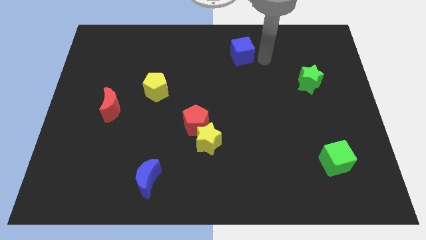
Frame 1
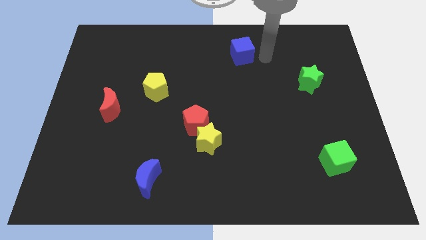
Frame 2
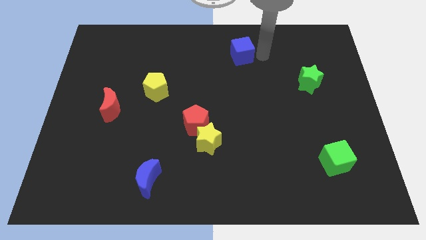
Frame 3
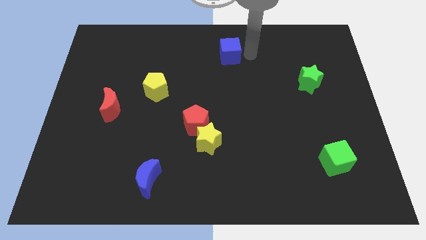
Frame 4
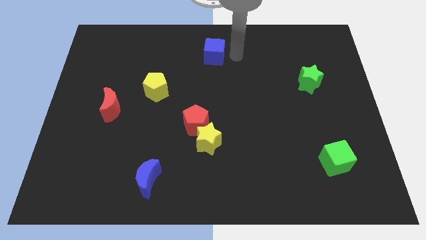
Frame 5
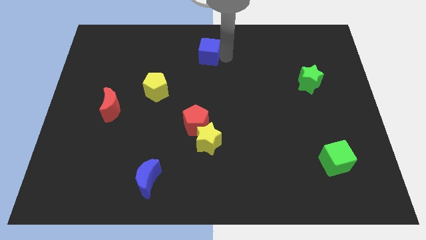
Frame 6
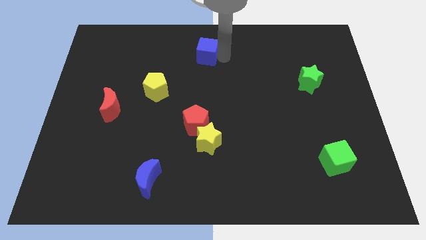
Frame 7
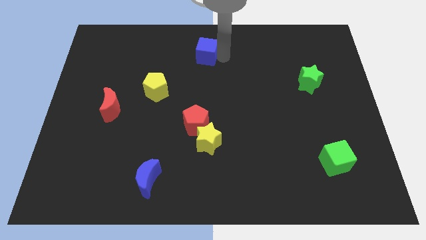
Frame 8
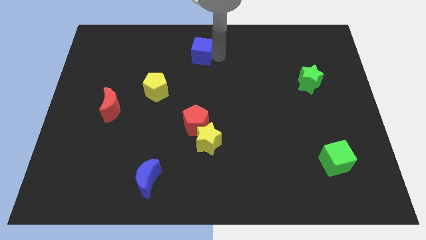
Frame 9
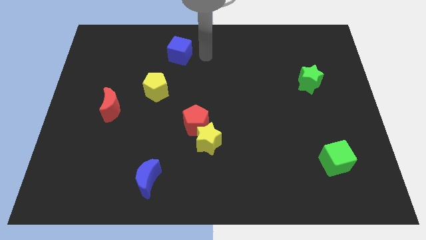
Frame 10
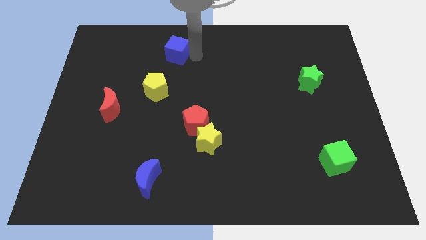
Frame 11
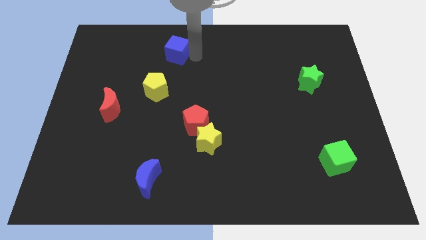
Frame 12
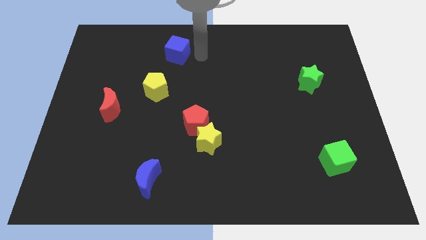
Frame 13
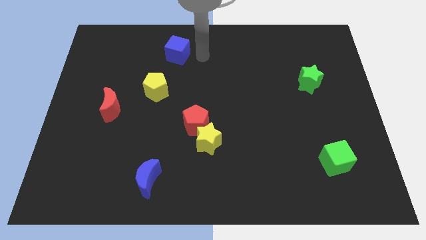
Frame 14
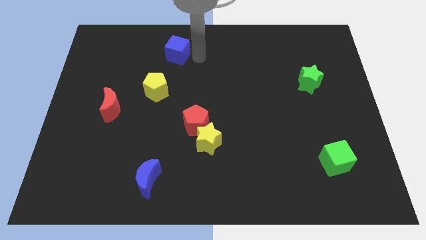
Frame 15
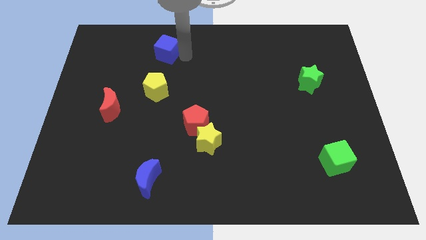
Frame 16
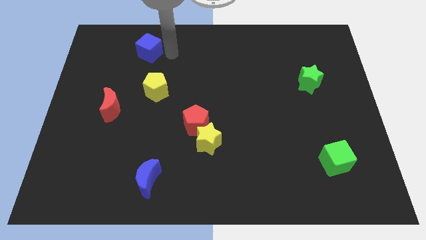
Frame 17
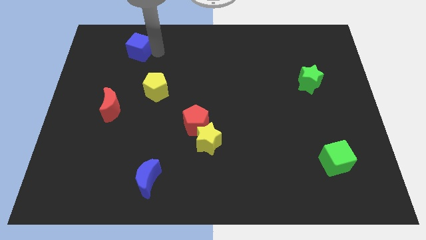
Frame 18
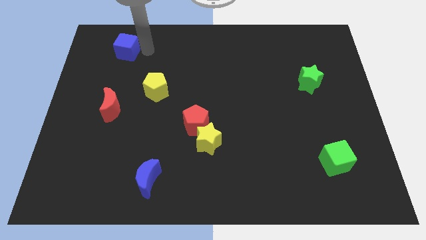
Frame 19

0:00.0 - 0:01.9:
move the blue cube to the top left side

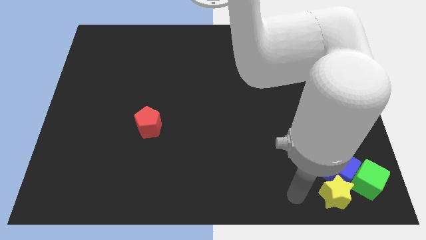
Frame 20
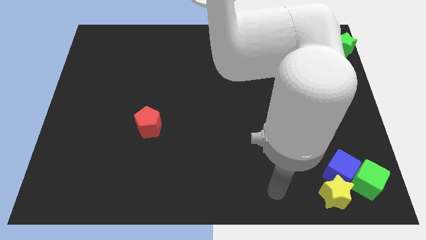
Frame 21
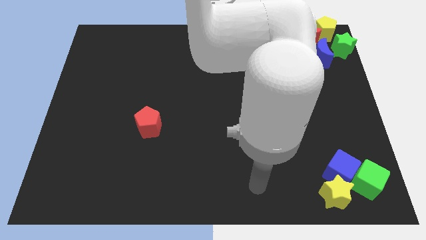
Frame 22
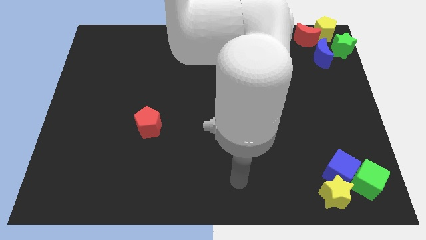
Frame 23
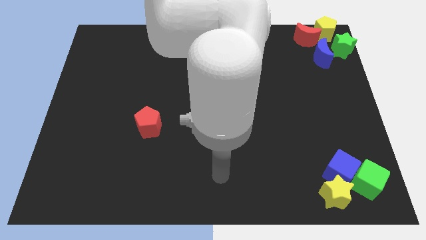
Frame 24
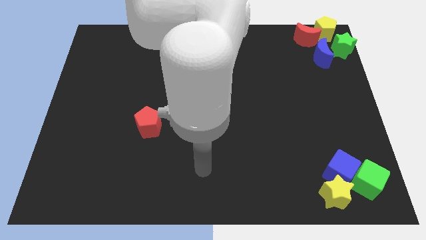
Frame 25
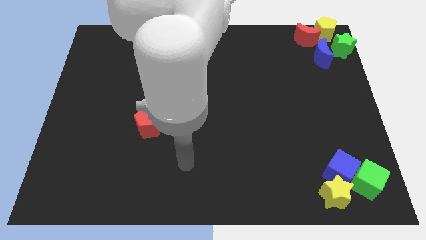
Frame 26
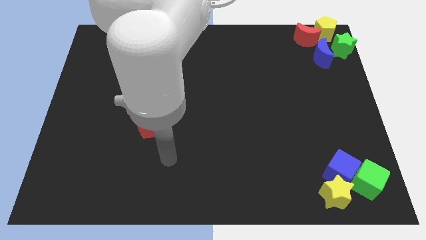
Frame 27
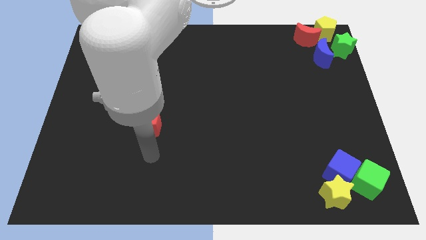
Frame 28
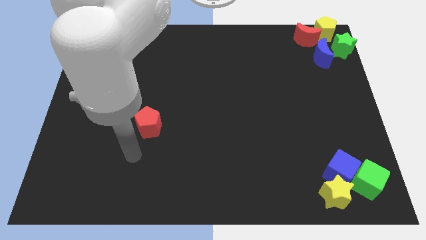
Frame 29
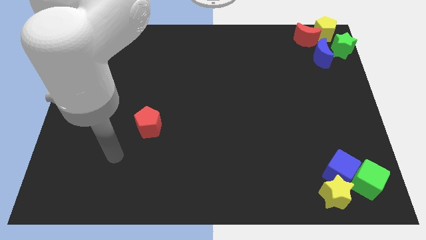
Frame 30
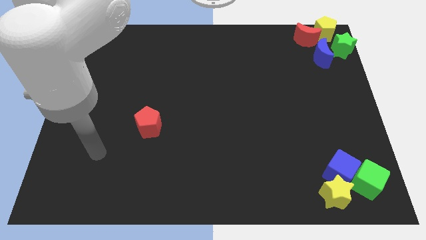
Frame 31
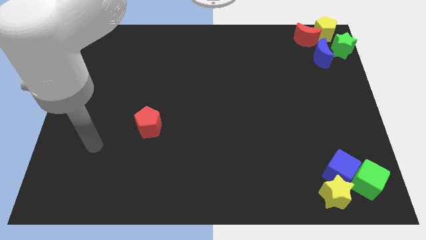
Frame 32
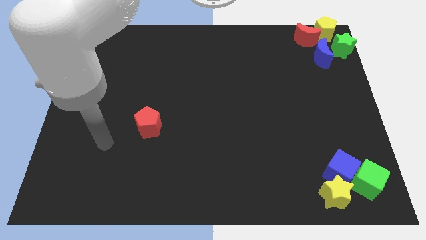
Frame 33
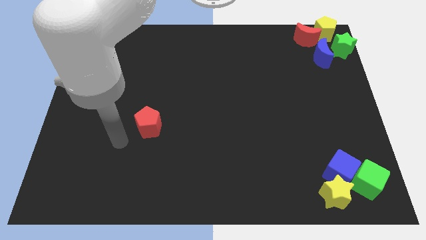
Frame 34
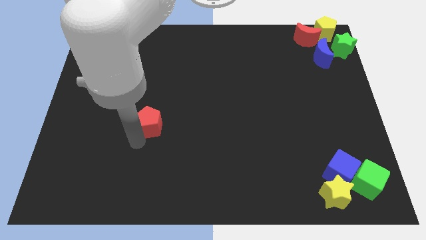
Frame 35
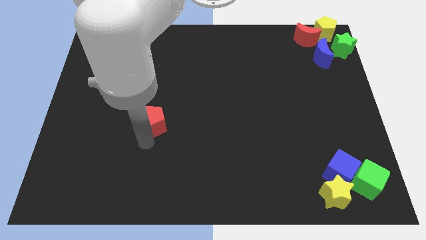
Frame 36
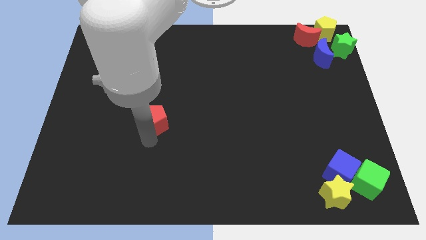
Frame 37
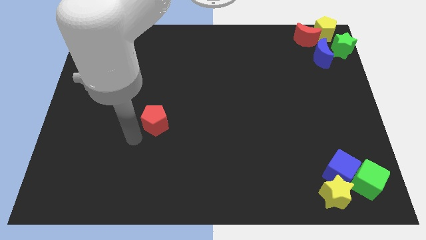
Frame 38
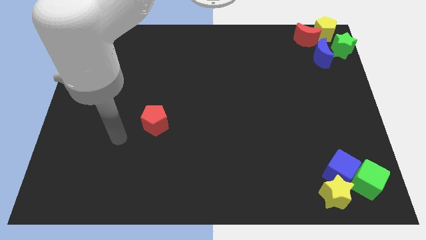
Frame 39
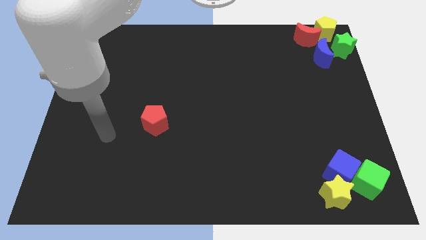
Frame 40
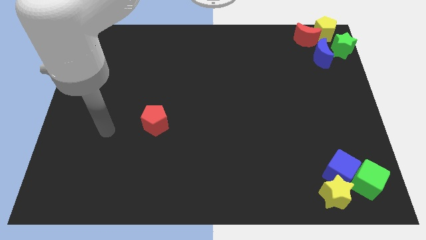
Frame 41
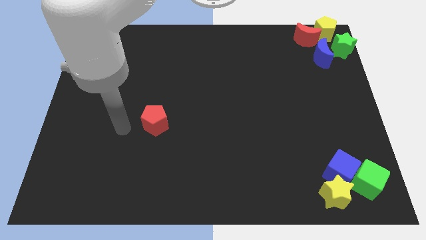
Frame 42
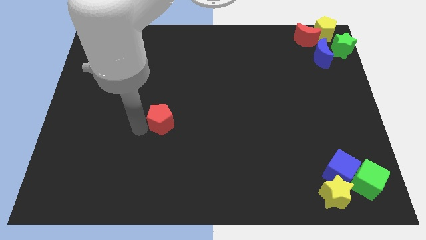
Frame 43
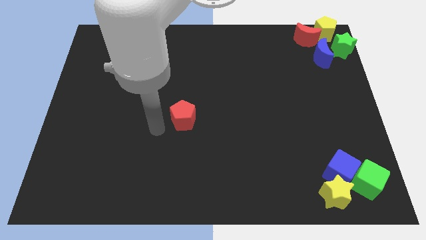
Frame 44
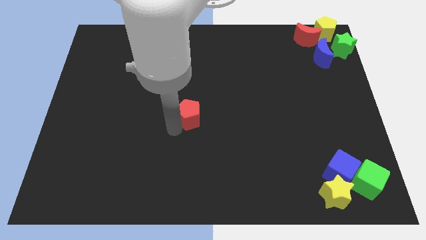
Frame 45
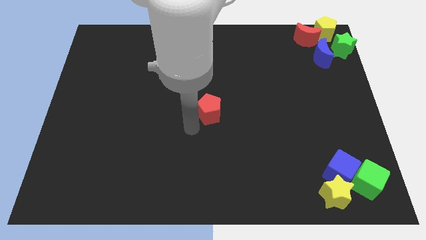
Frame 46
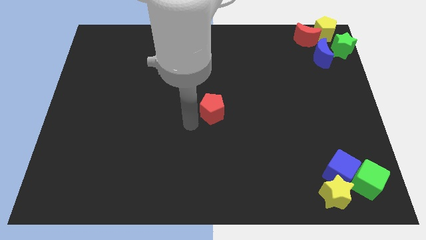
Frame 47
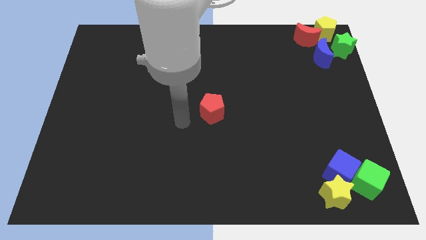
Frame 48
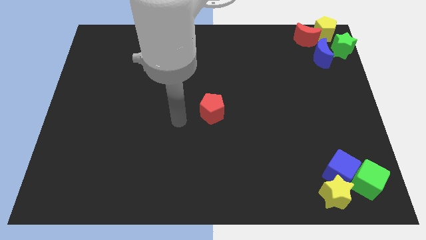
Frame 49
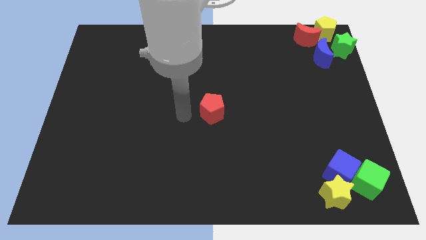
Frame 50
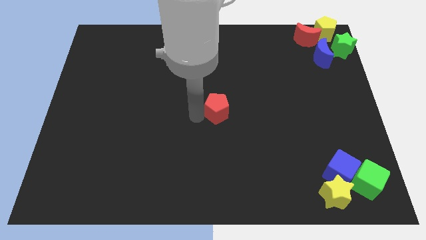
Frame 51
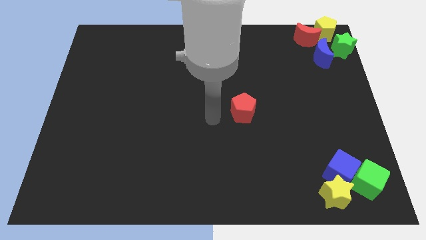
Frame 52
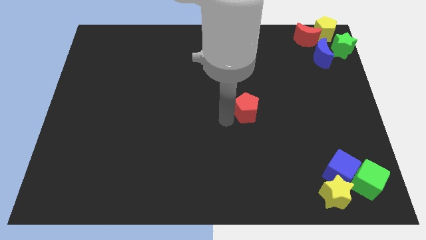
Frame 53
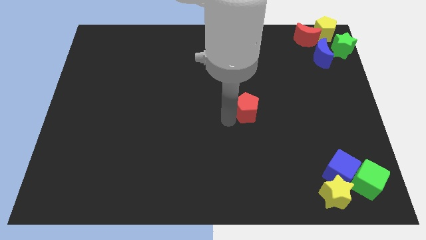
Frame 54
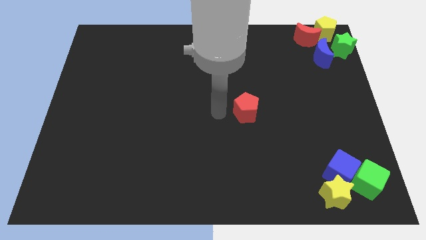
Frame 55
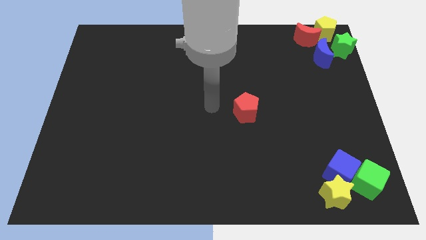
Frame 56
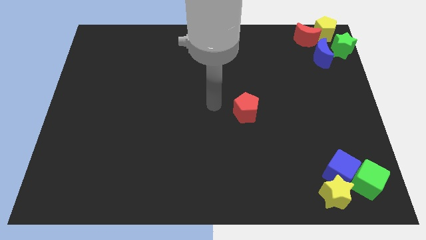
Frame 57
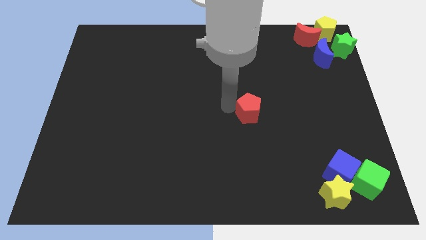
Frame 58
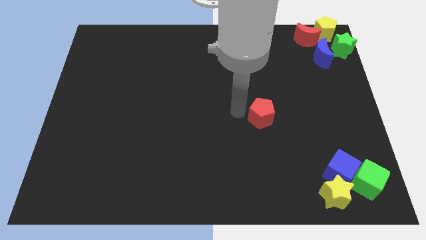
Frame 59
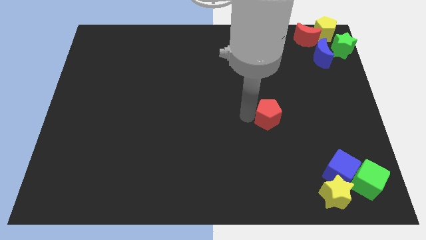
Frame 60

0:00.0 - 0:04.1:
move the red pentagon to the right side of the table

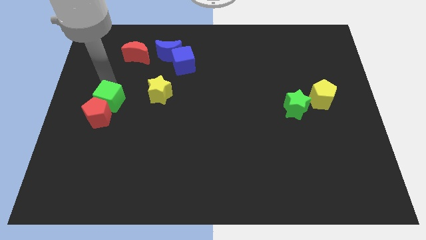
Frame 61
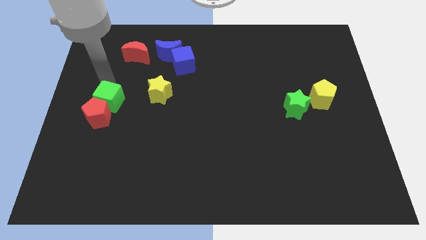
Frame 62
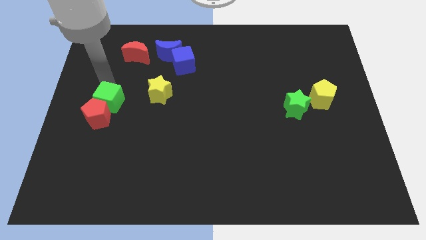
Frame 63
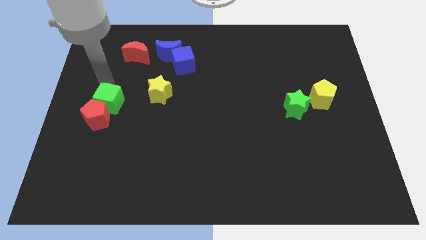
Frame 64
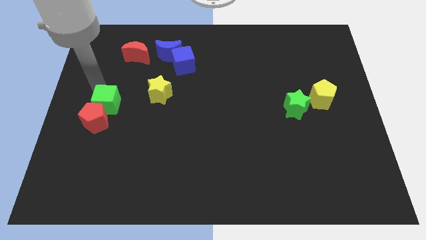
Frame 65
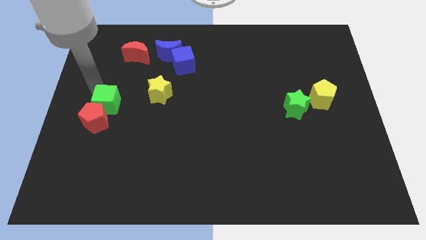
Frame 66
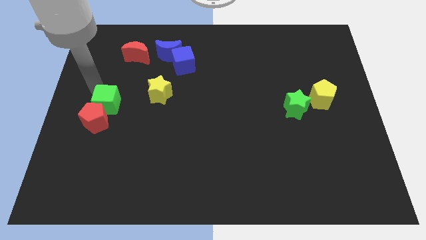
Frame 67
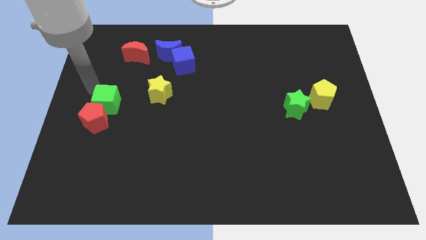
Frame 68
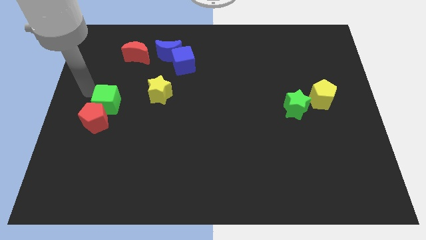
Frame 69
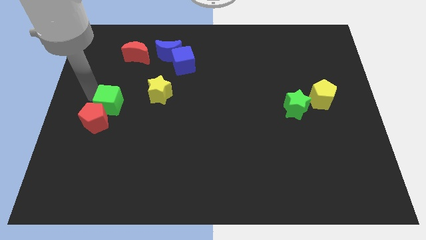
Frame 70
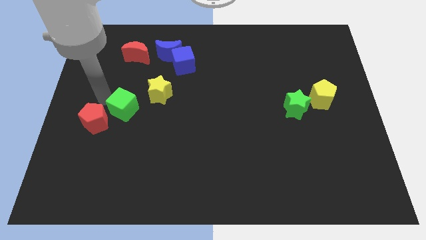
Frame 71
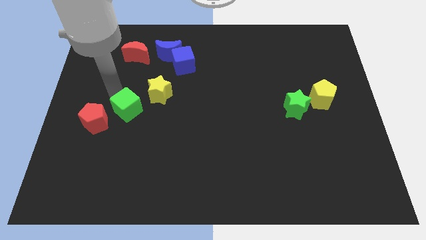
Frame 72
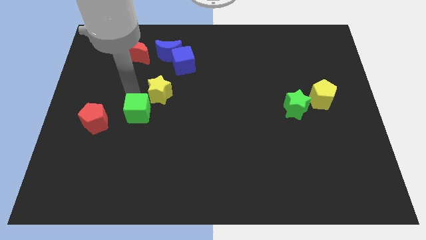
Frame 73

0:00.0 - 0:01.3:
separate the green cube away from the red pentagon

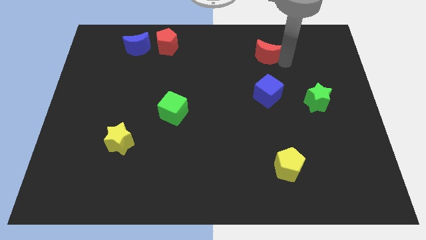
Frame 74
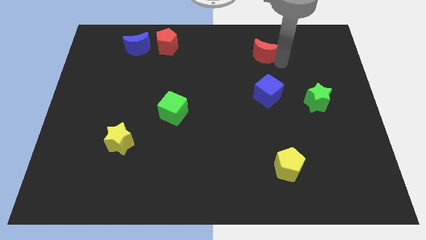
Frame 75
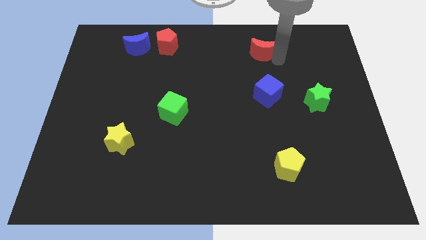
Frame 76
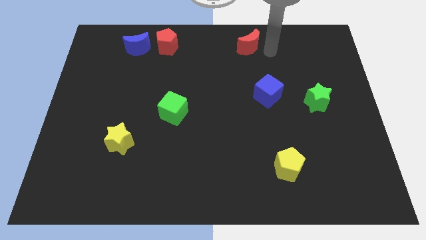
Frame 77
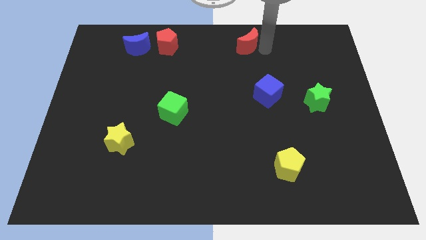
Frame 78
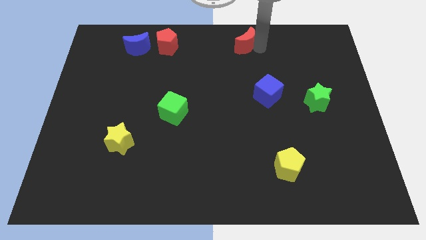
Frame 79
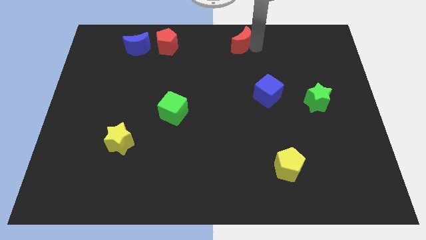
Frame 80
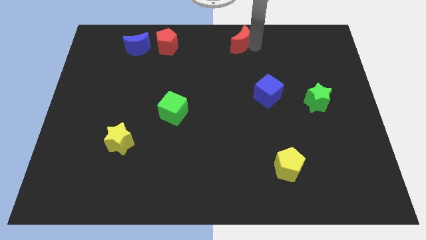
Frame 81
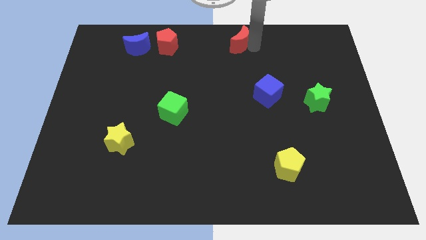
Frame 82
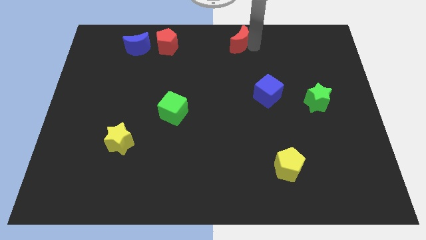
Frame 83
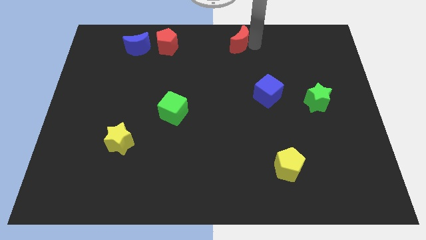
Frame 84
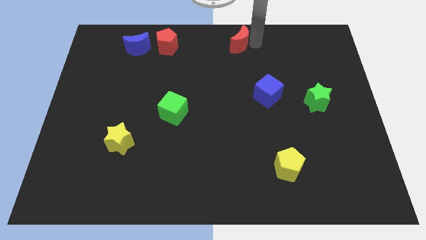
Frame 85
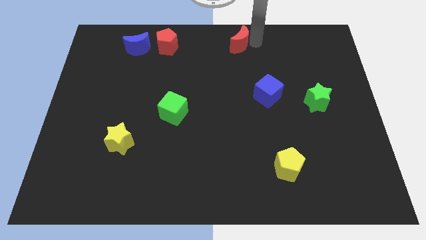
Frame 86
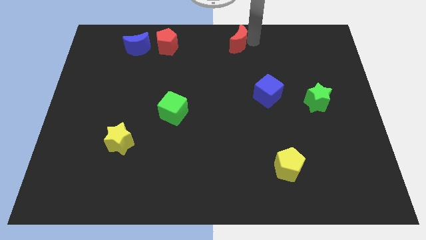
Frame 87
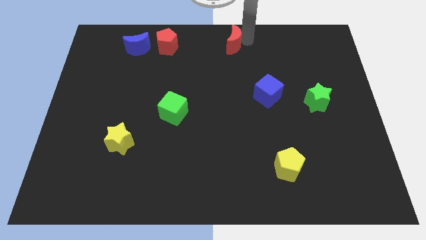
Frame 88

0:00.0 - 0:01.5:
move the red crescent towards the red pentagon

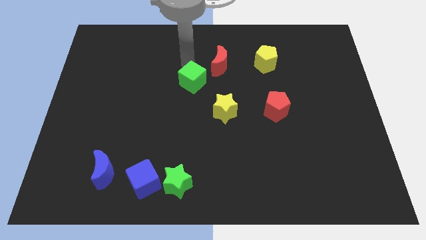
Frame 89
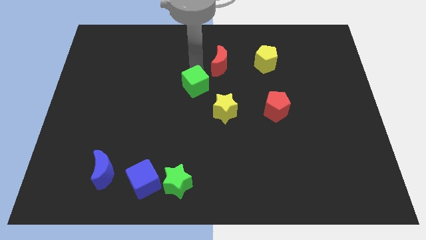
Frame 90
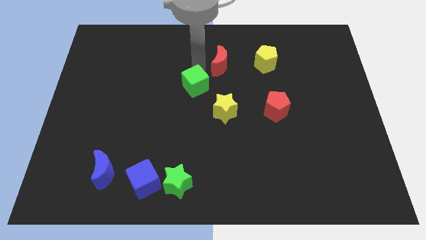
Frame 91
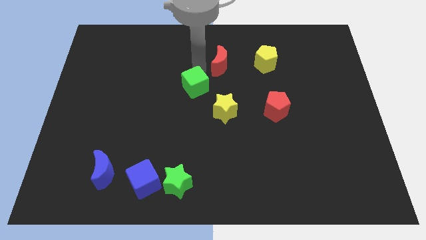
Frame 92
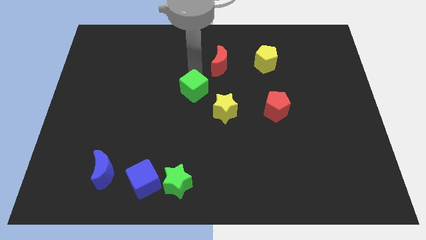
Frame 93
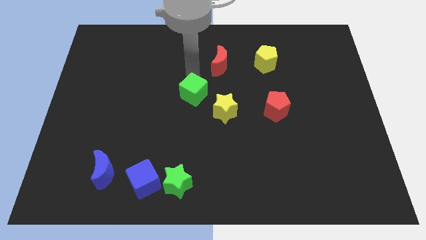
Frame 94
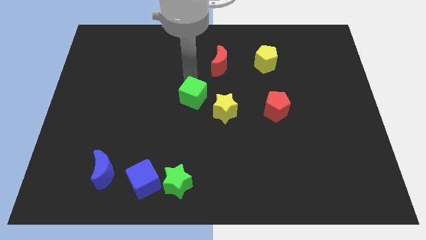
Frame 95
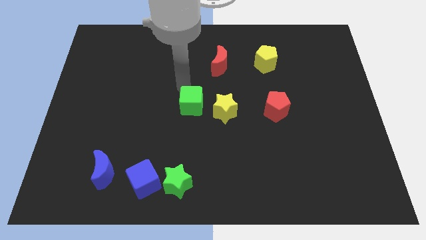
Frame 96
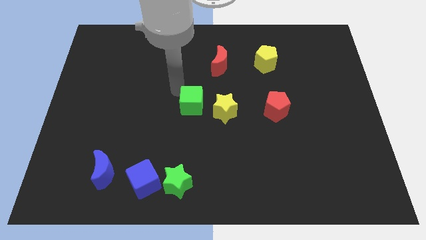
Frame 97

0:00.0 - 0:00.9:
place the green cube left to the yellow star
